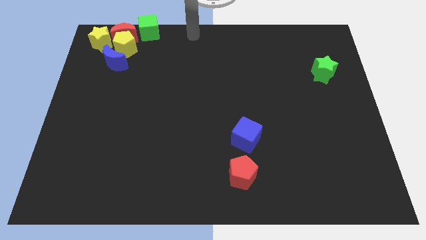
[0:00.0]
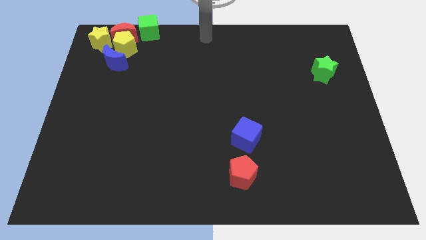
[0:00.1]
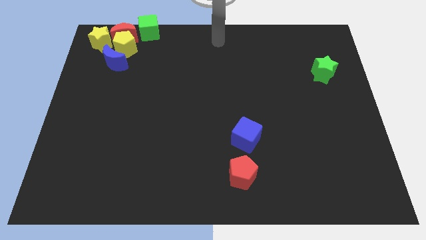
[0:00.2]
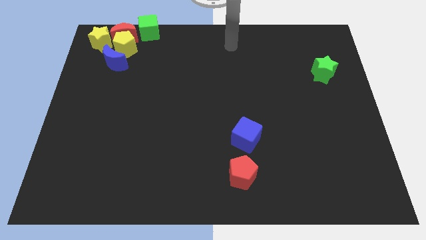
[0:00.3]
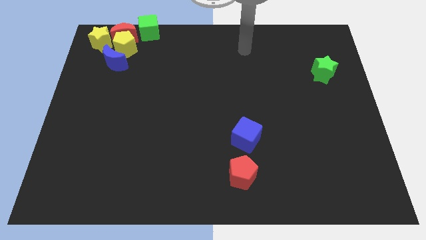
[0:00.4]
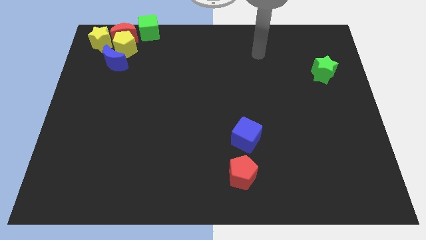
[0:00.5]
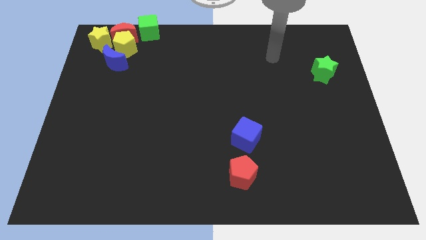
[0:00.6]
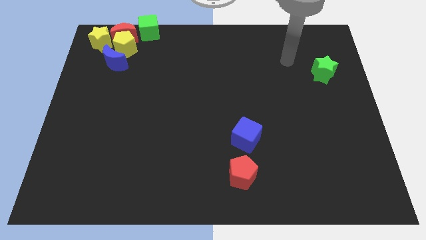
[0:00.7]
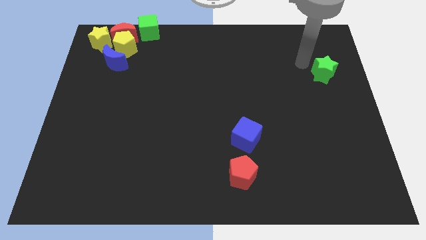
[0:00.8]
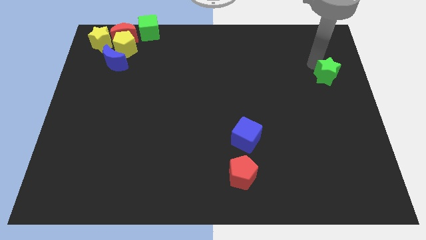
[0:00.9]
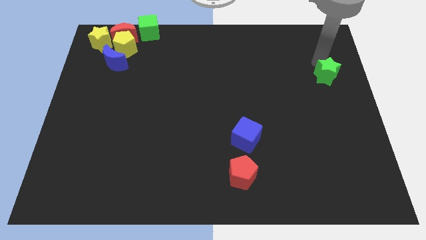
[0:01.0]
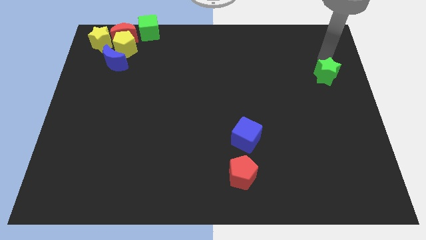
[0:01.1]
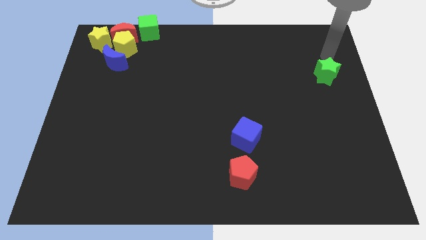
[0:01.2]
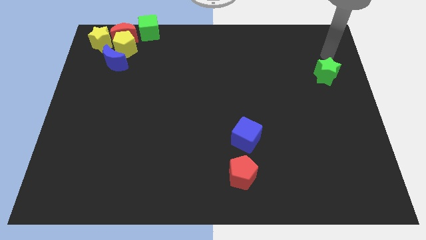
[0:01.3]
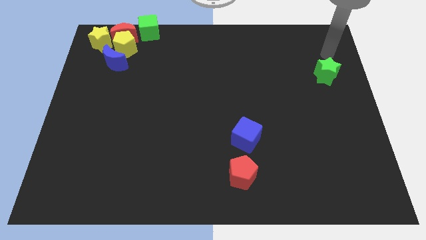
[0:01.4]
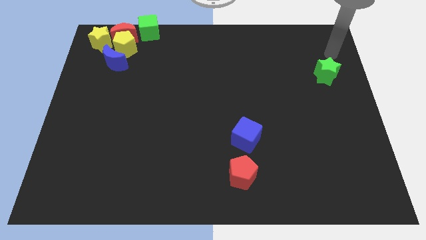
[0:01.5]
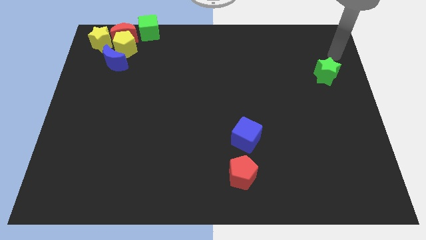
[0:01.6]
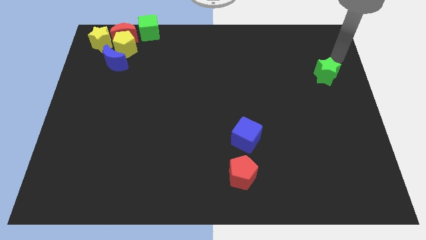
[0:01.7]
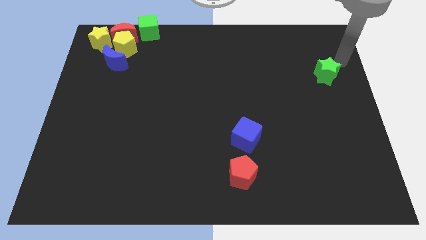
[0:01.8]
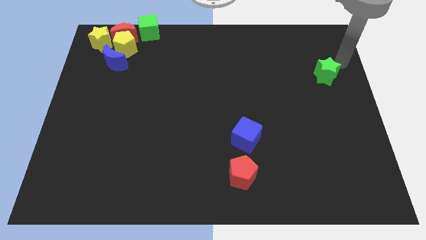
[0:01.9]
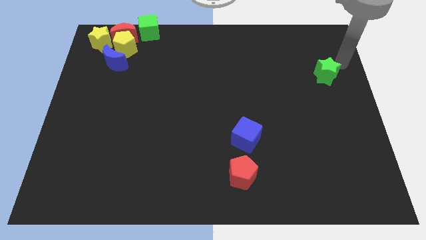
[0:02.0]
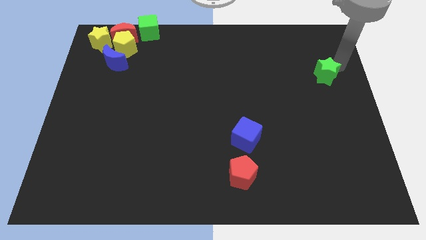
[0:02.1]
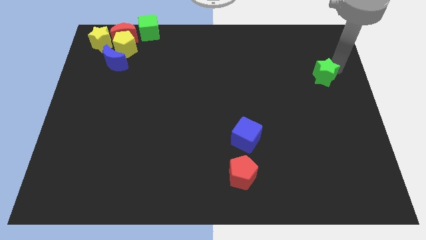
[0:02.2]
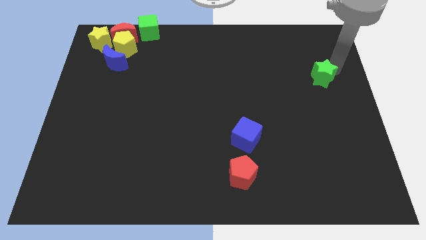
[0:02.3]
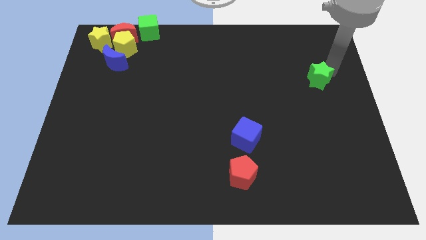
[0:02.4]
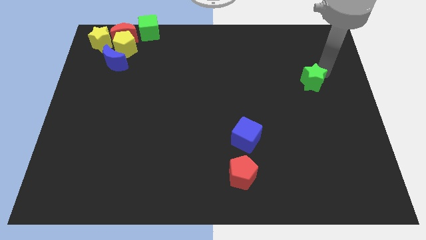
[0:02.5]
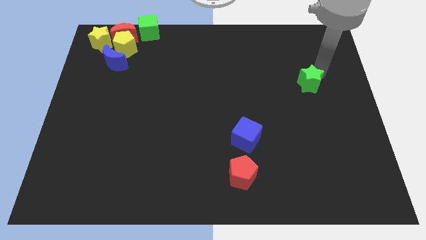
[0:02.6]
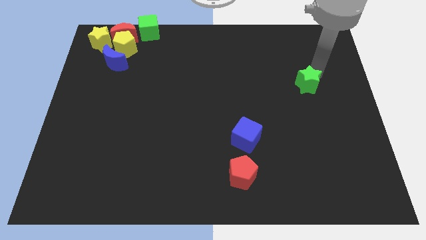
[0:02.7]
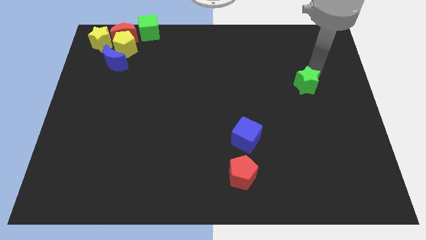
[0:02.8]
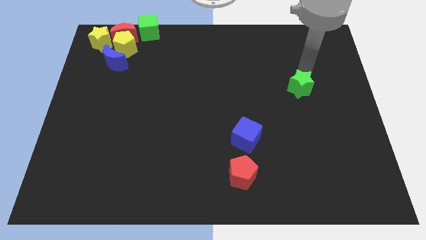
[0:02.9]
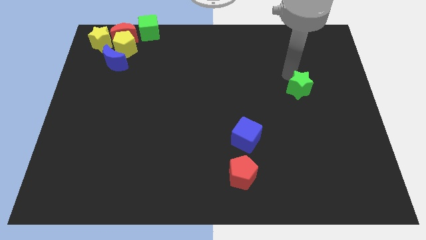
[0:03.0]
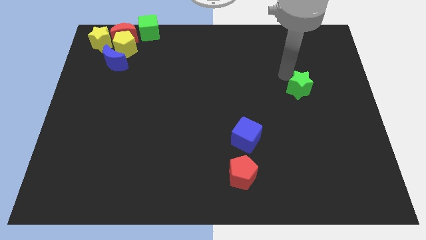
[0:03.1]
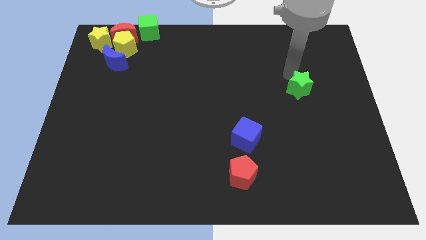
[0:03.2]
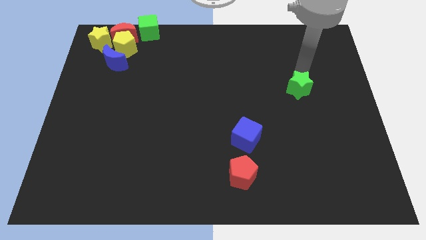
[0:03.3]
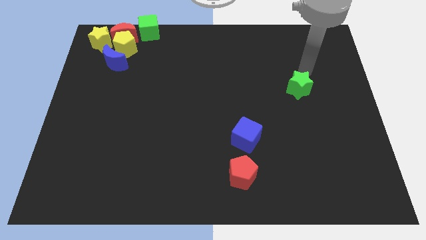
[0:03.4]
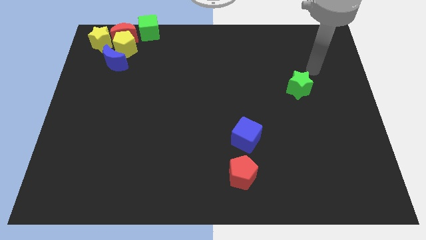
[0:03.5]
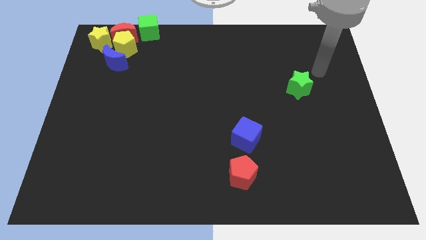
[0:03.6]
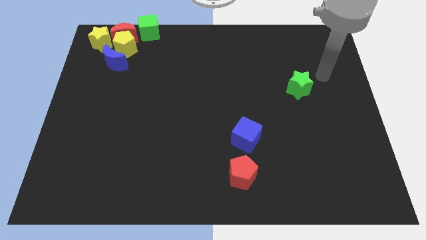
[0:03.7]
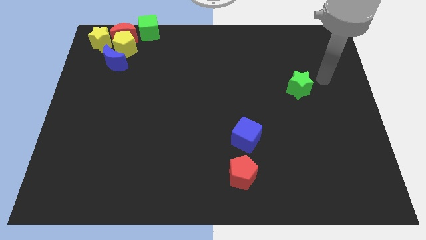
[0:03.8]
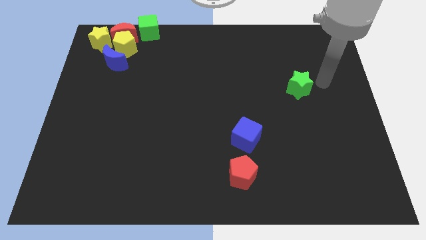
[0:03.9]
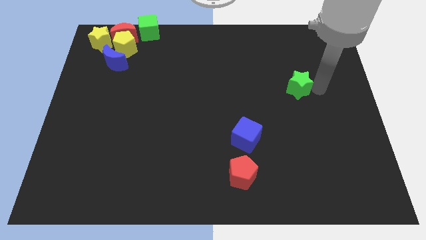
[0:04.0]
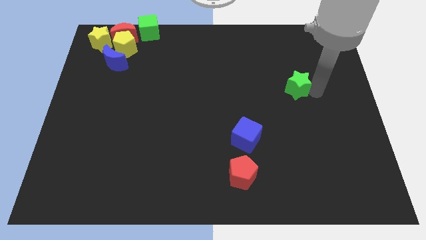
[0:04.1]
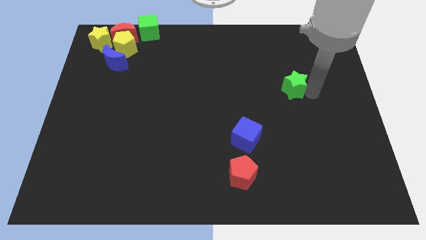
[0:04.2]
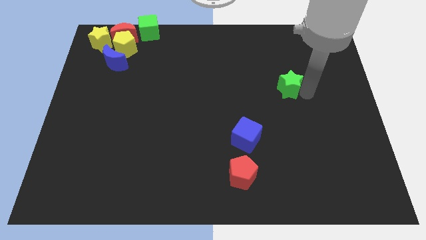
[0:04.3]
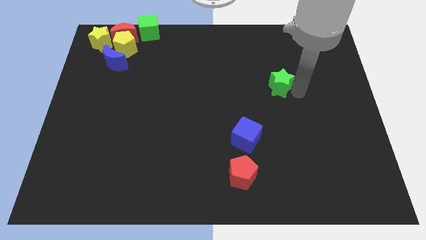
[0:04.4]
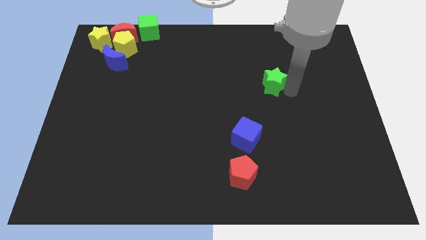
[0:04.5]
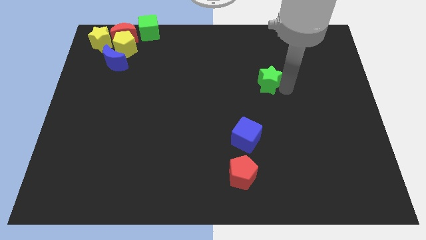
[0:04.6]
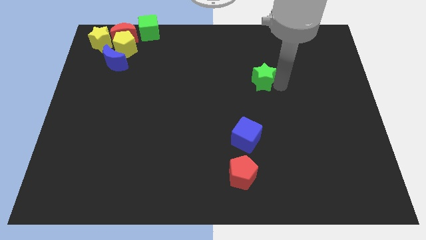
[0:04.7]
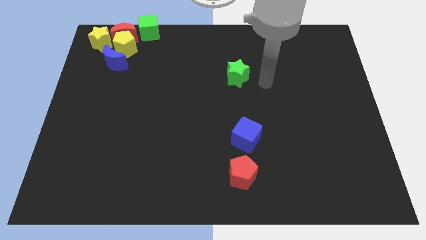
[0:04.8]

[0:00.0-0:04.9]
move the green star to the top side of the blue cube

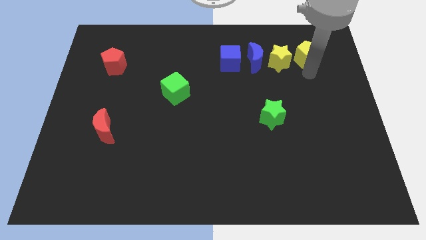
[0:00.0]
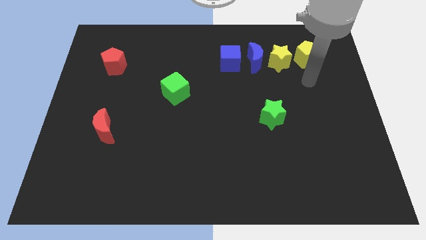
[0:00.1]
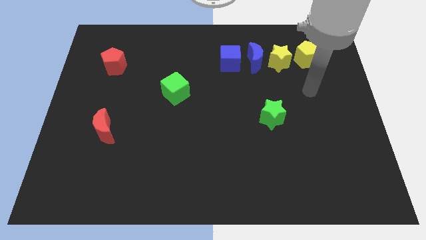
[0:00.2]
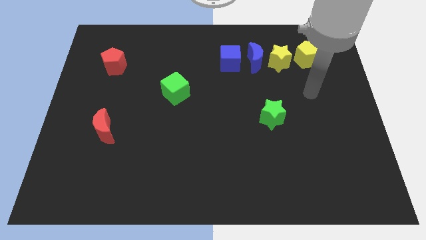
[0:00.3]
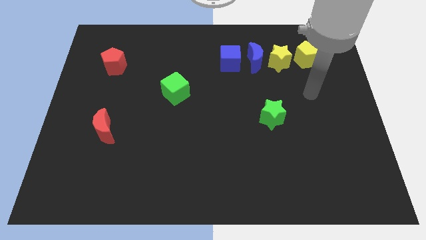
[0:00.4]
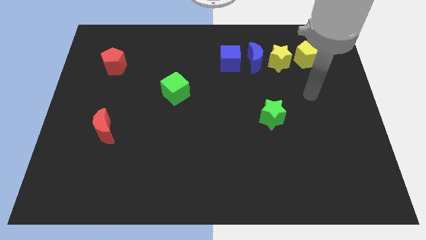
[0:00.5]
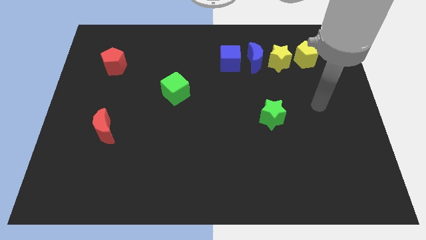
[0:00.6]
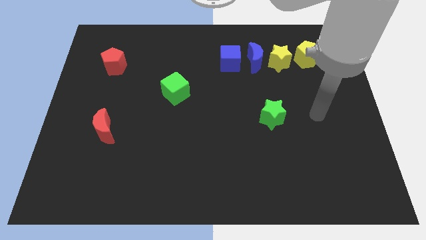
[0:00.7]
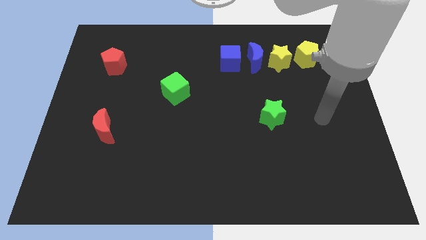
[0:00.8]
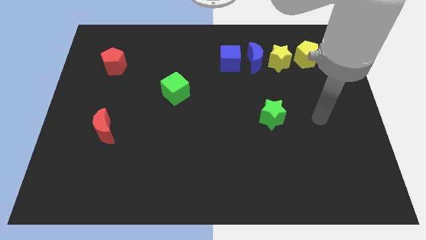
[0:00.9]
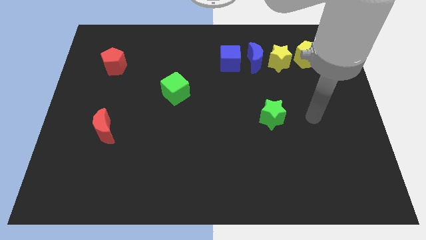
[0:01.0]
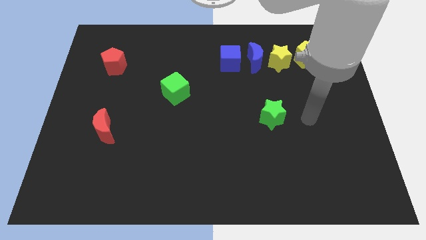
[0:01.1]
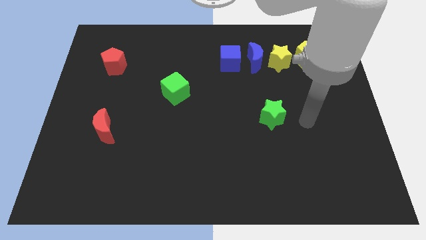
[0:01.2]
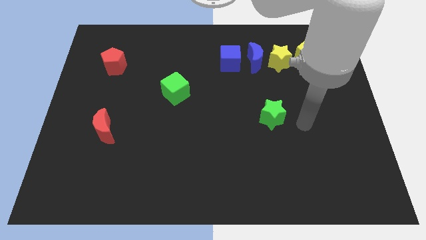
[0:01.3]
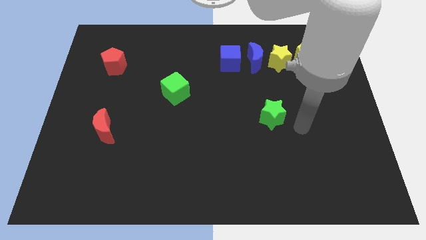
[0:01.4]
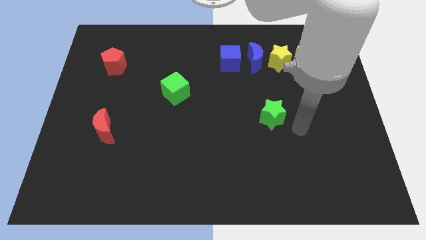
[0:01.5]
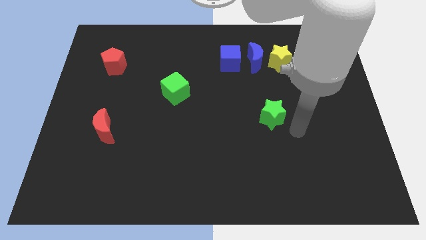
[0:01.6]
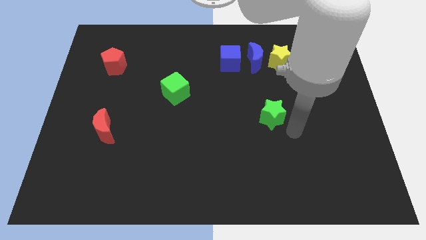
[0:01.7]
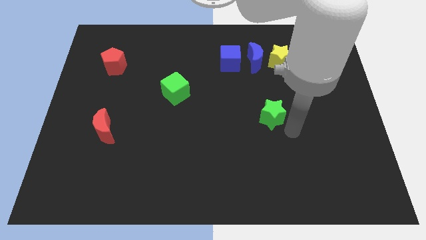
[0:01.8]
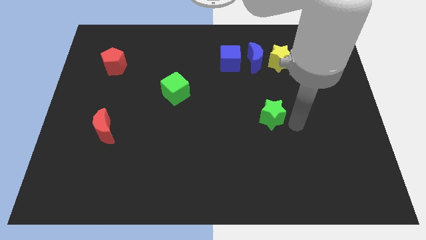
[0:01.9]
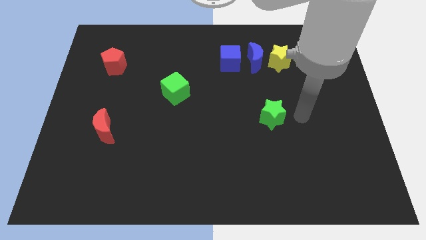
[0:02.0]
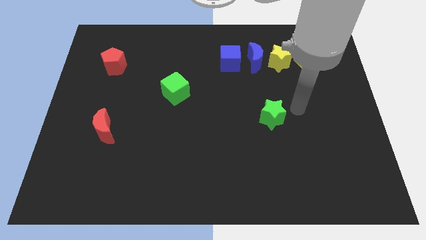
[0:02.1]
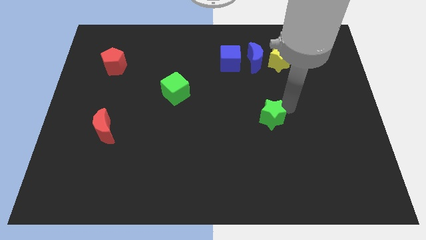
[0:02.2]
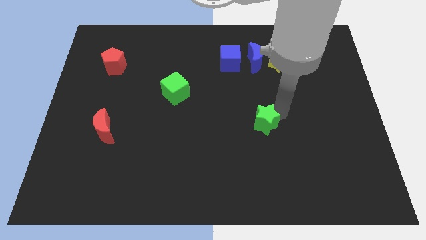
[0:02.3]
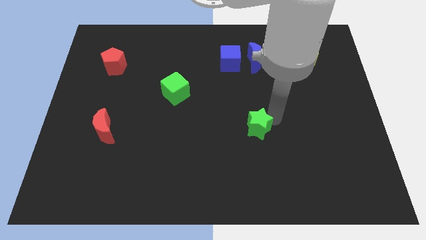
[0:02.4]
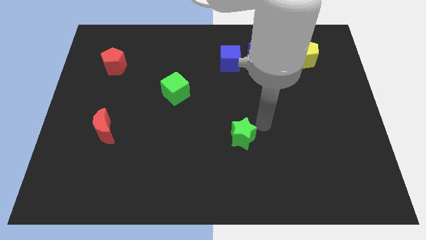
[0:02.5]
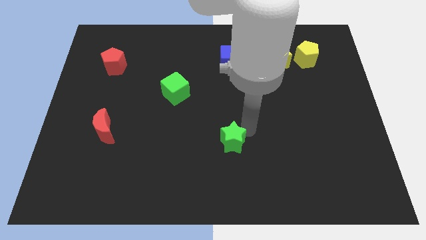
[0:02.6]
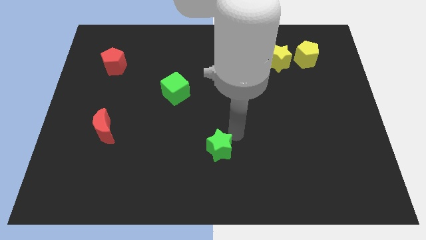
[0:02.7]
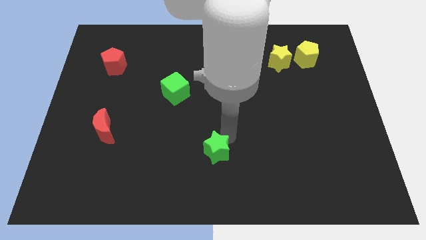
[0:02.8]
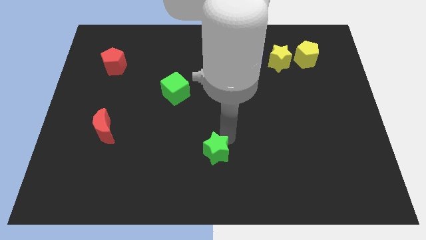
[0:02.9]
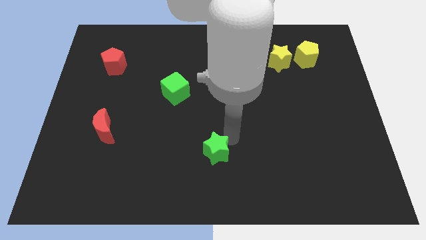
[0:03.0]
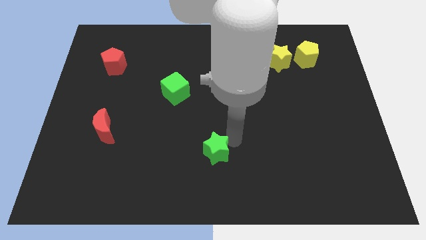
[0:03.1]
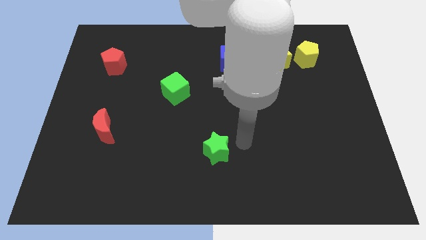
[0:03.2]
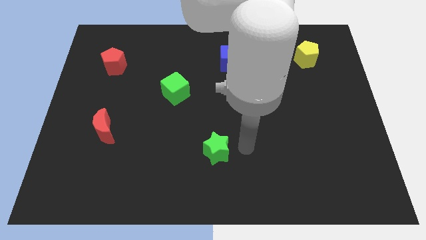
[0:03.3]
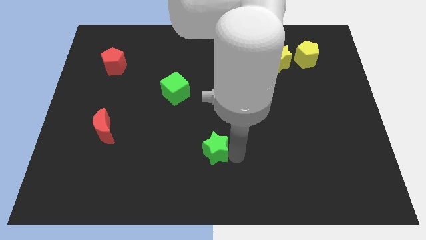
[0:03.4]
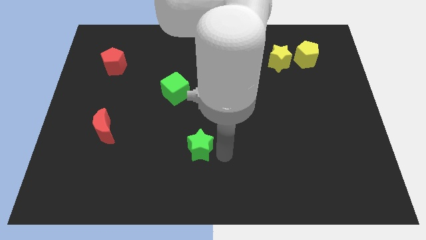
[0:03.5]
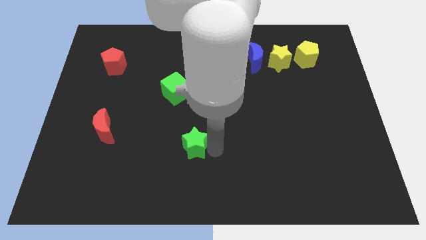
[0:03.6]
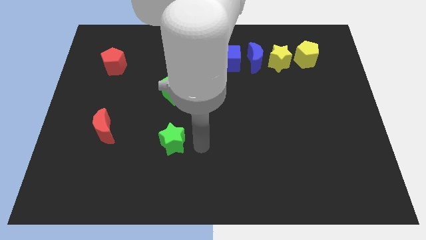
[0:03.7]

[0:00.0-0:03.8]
move the green star below the green cube

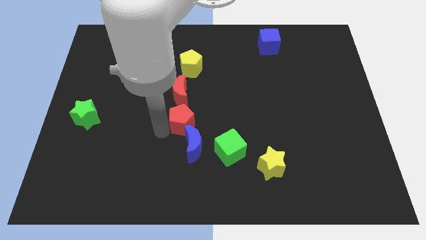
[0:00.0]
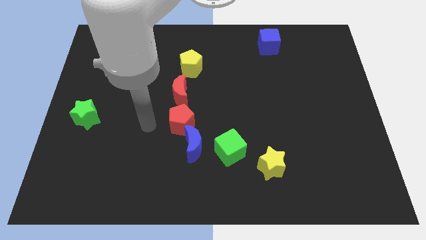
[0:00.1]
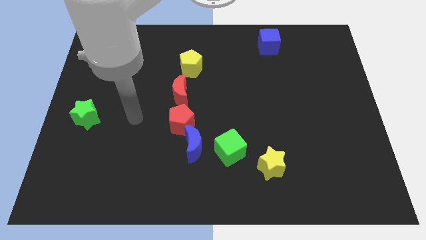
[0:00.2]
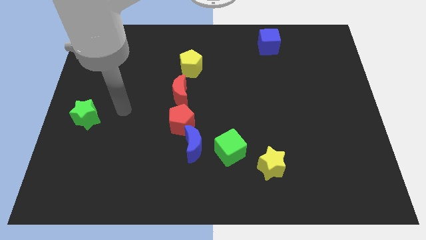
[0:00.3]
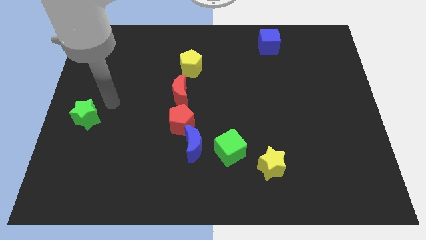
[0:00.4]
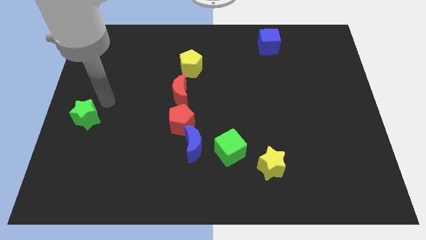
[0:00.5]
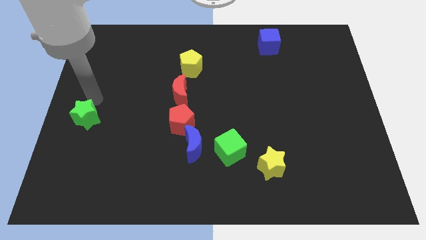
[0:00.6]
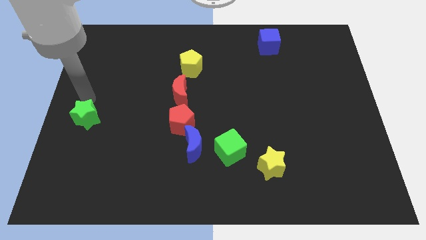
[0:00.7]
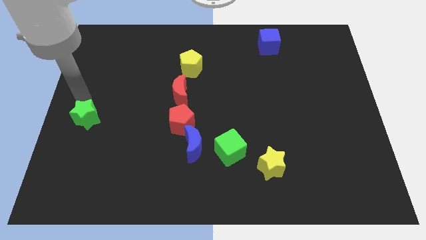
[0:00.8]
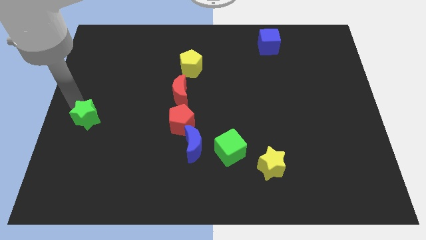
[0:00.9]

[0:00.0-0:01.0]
move your arm away from the red pentagon
